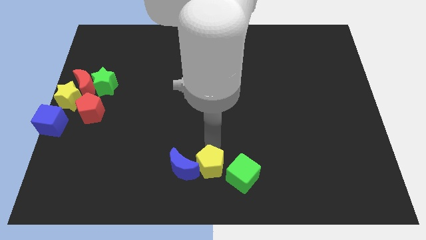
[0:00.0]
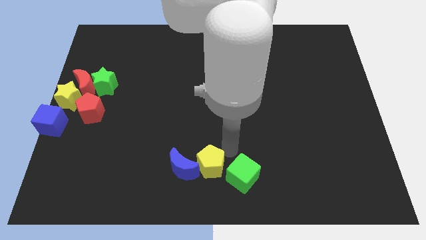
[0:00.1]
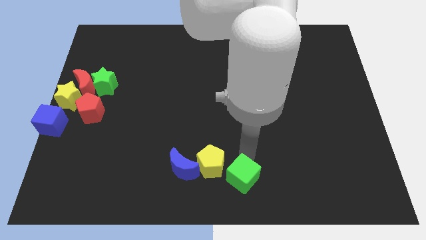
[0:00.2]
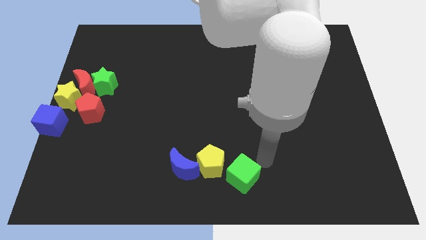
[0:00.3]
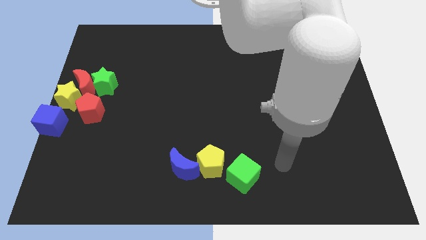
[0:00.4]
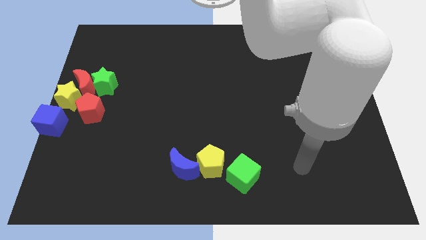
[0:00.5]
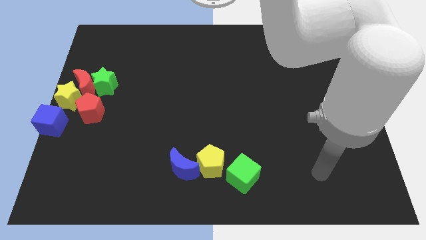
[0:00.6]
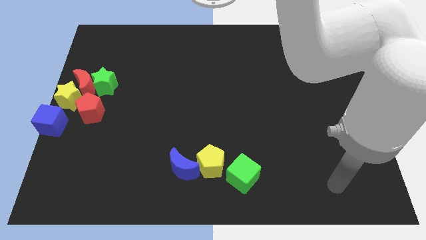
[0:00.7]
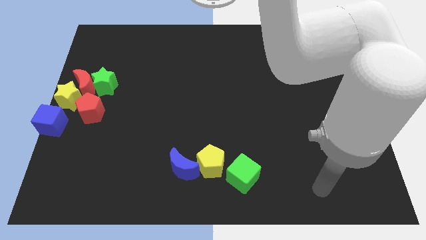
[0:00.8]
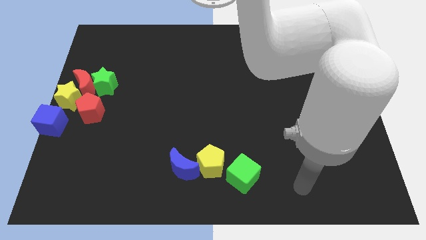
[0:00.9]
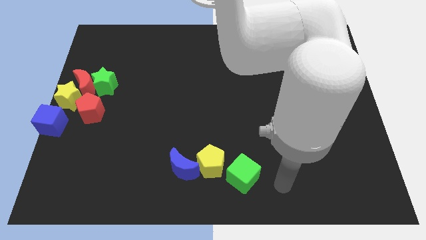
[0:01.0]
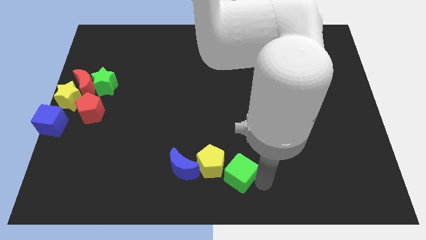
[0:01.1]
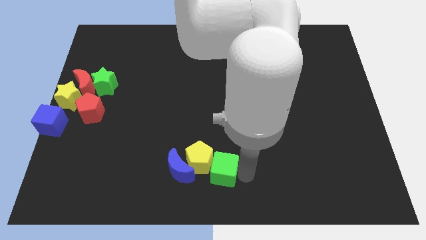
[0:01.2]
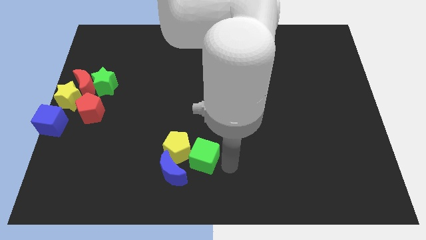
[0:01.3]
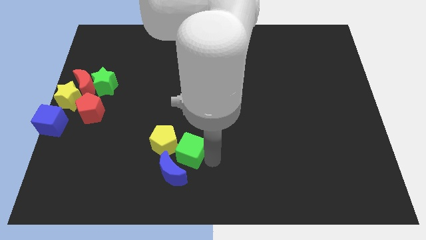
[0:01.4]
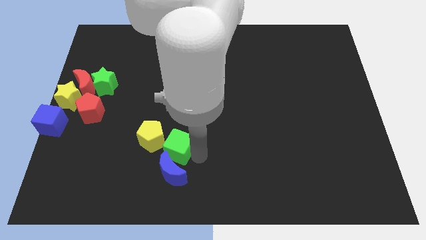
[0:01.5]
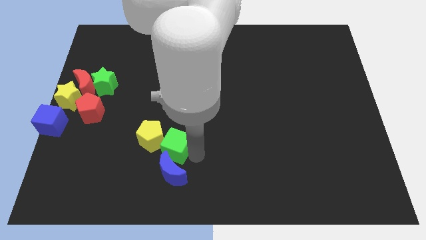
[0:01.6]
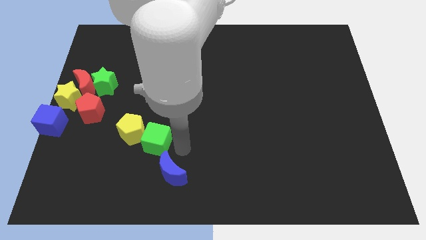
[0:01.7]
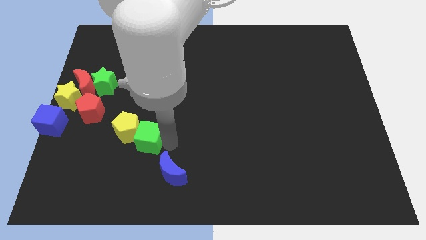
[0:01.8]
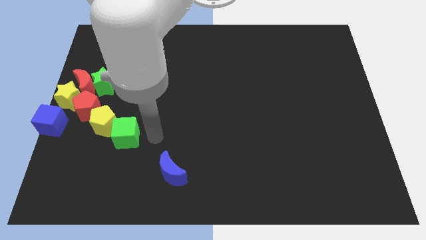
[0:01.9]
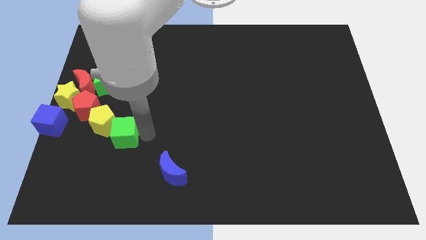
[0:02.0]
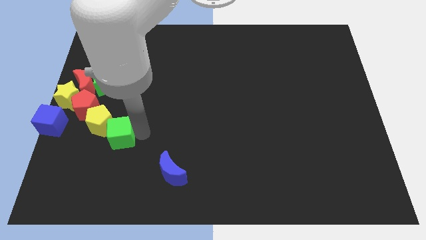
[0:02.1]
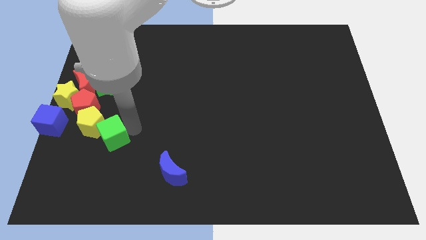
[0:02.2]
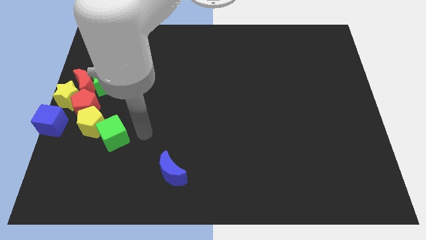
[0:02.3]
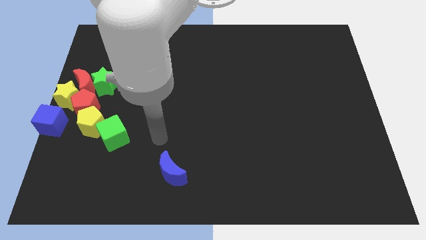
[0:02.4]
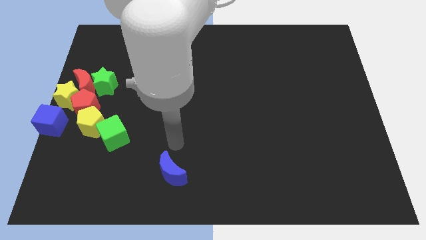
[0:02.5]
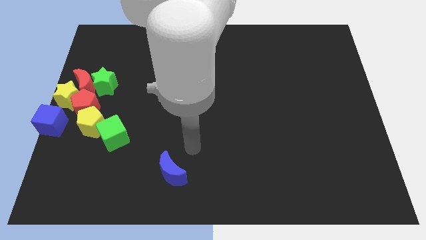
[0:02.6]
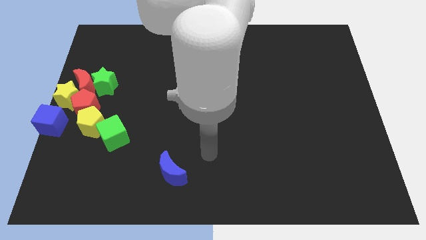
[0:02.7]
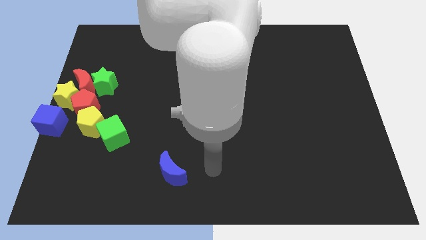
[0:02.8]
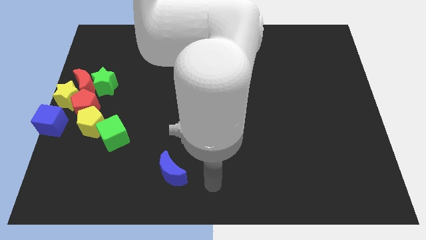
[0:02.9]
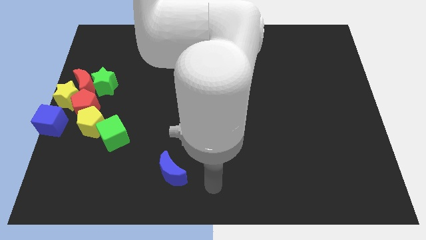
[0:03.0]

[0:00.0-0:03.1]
push the yellow pentagon and green cube together into the red pentagon

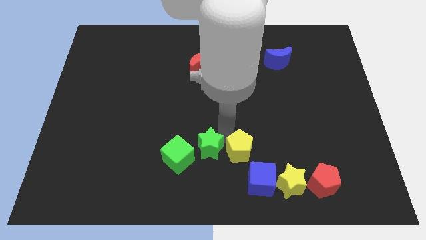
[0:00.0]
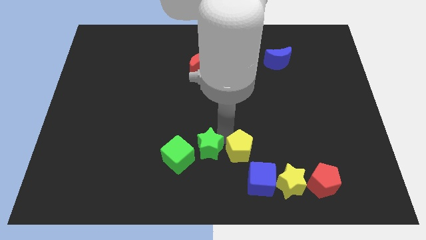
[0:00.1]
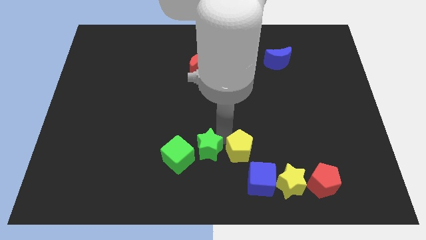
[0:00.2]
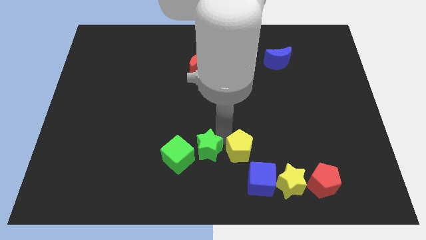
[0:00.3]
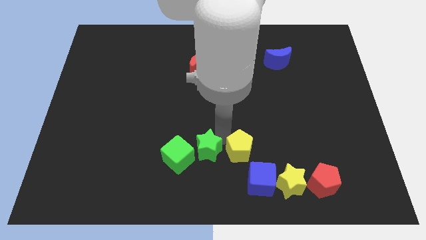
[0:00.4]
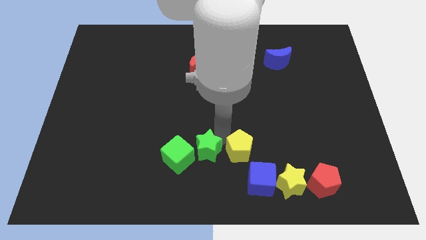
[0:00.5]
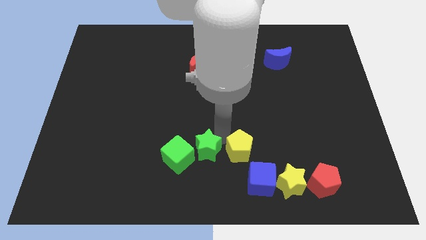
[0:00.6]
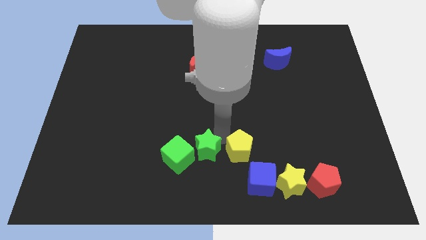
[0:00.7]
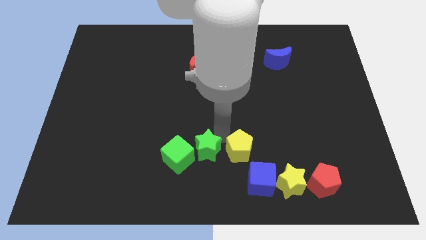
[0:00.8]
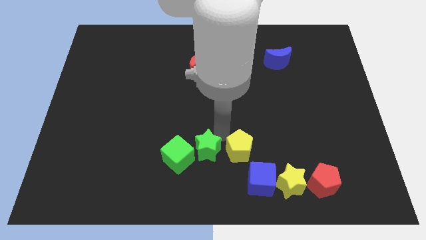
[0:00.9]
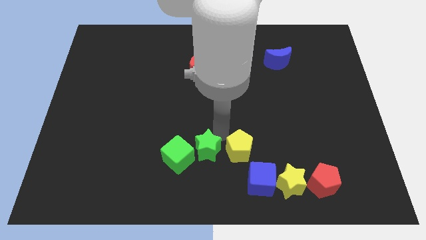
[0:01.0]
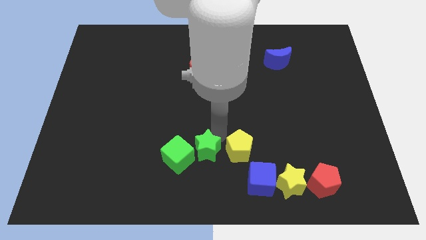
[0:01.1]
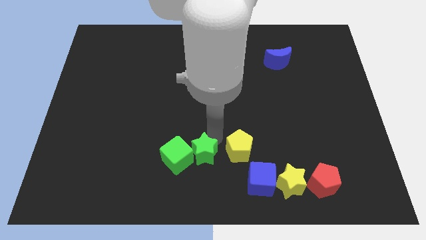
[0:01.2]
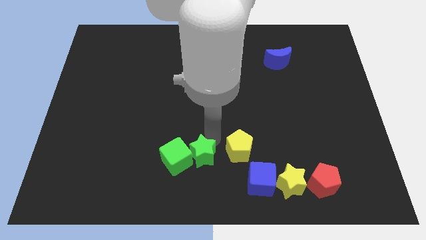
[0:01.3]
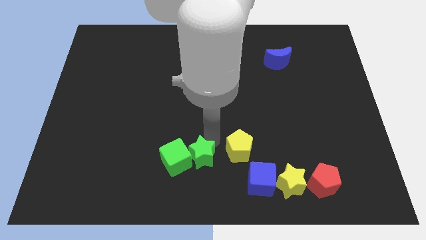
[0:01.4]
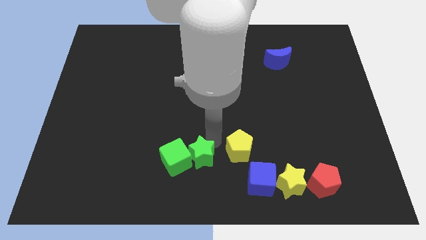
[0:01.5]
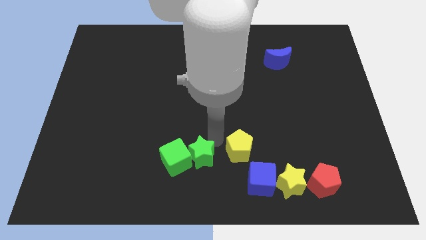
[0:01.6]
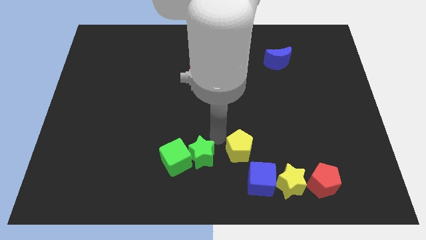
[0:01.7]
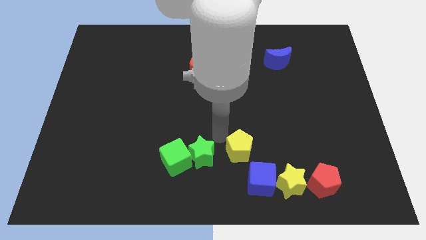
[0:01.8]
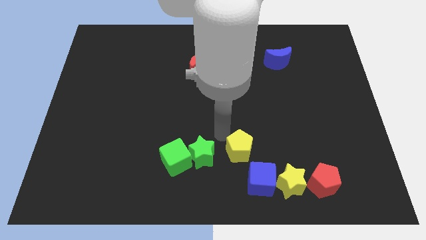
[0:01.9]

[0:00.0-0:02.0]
push the green star into the green cube

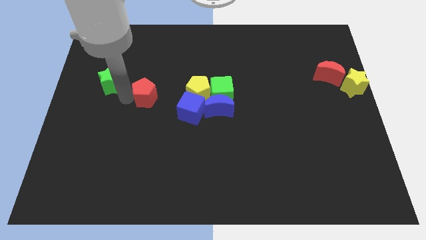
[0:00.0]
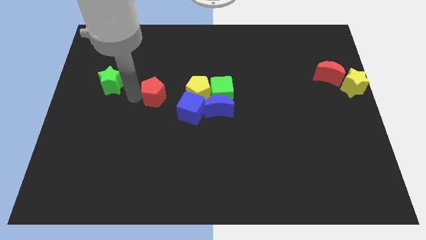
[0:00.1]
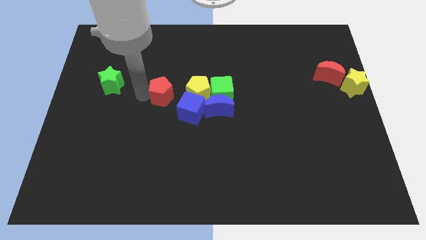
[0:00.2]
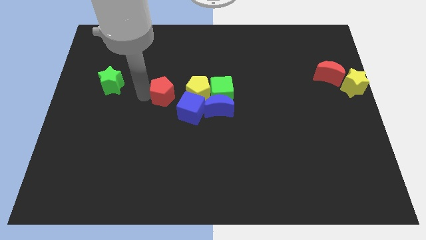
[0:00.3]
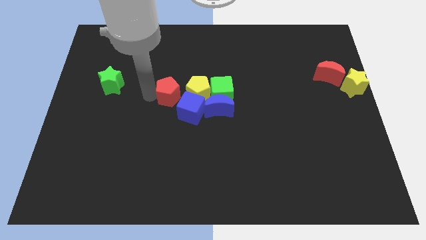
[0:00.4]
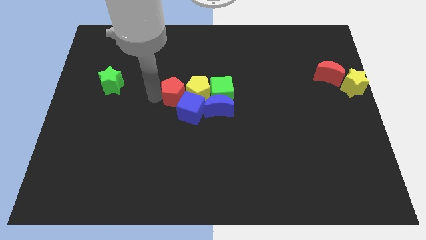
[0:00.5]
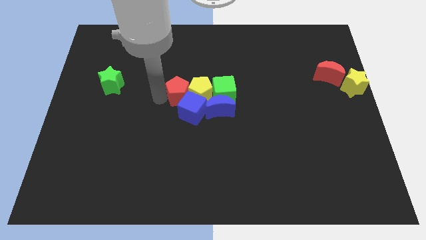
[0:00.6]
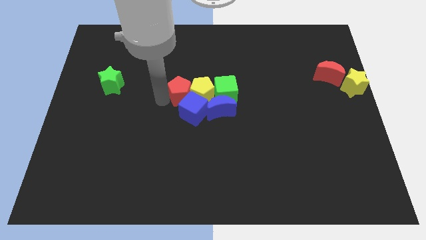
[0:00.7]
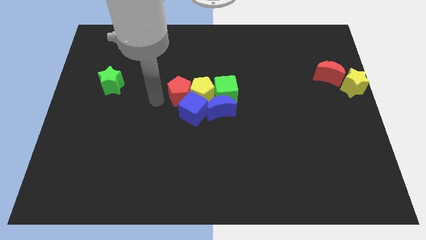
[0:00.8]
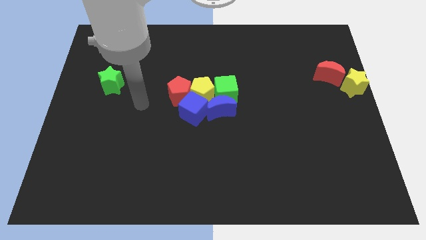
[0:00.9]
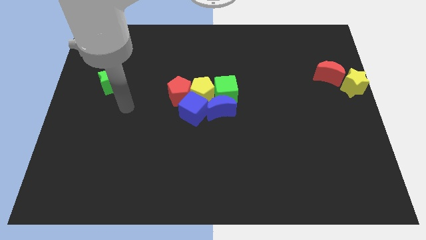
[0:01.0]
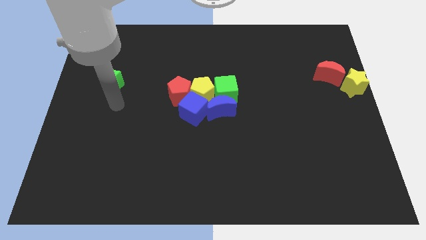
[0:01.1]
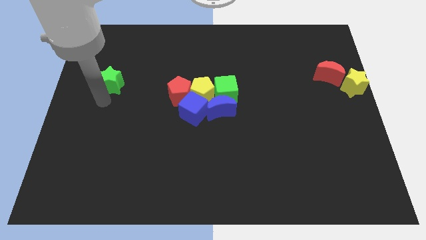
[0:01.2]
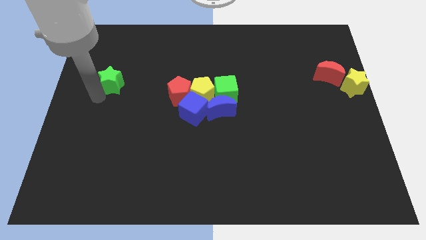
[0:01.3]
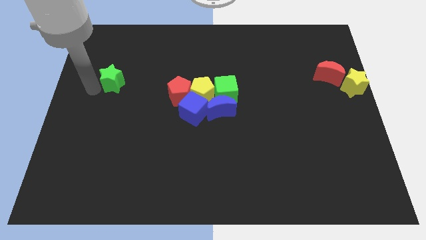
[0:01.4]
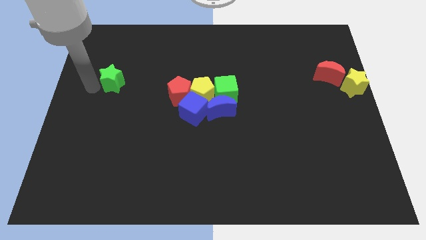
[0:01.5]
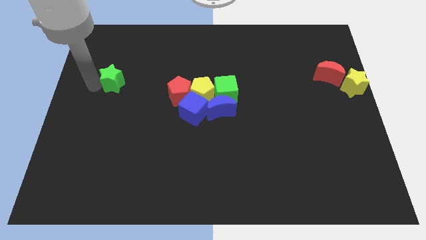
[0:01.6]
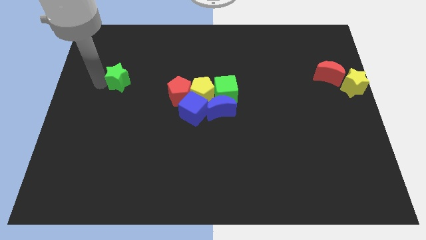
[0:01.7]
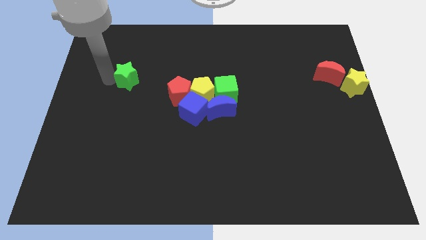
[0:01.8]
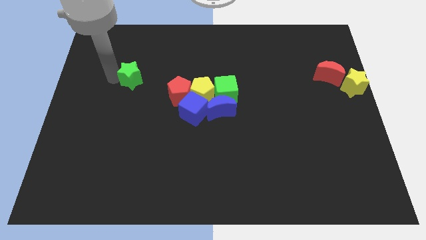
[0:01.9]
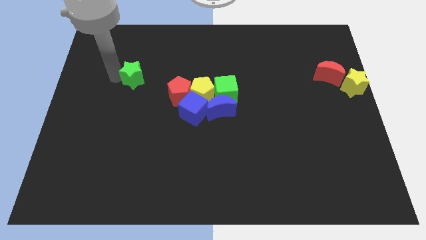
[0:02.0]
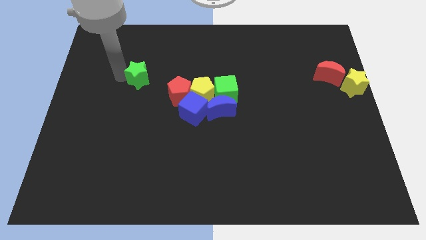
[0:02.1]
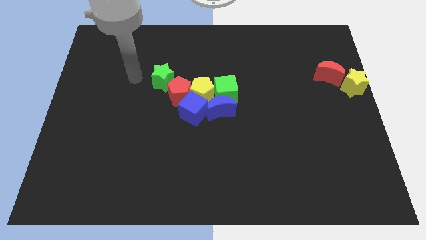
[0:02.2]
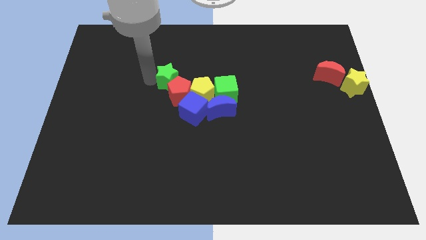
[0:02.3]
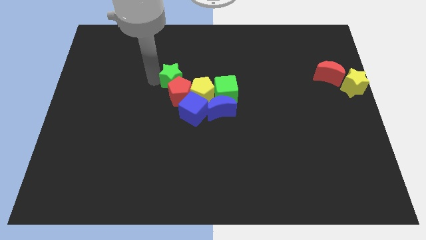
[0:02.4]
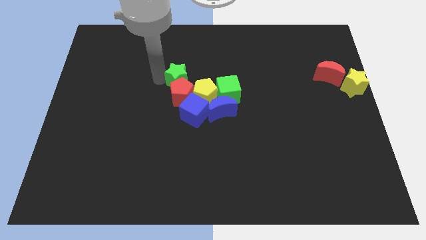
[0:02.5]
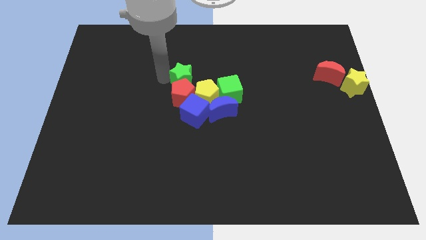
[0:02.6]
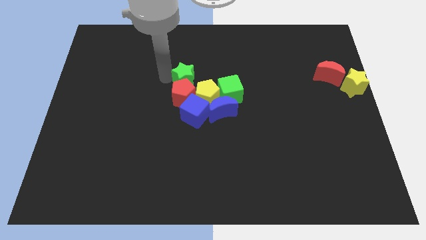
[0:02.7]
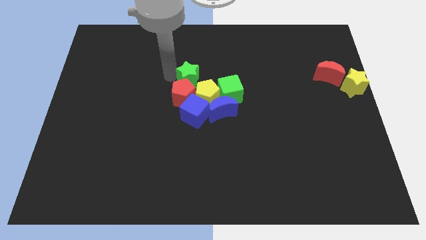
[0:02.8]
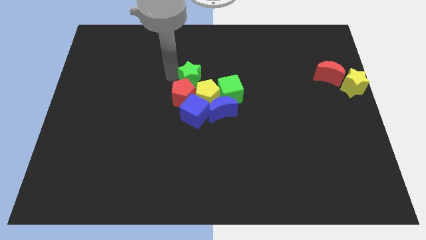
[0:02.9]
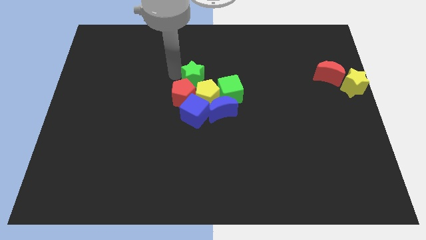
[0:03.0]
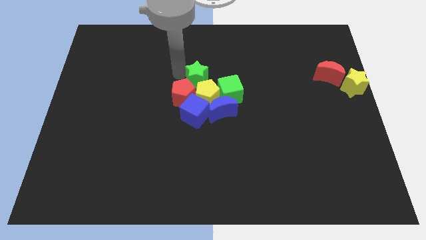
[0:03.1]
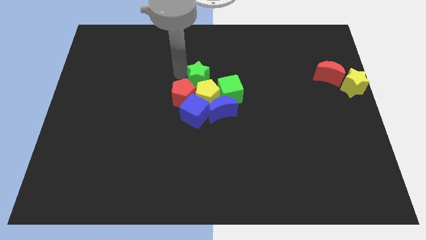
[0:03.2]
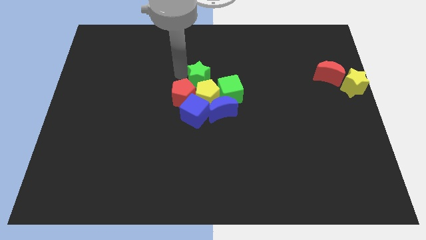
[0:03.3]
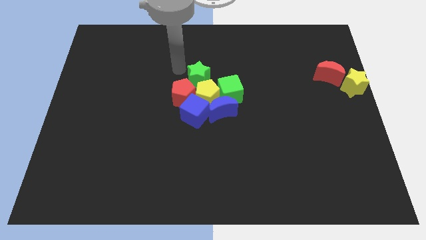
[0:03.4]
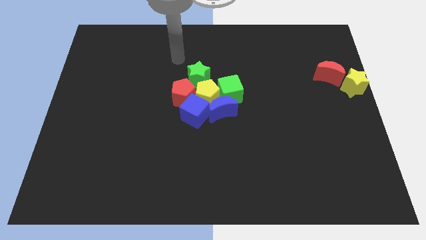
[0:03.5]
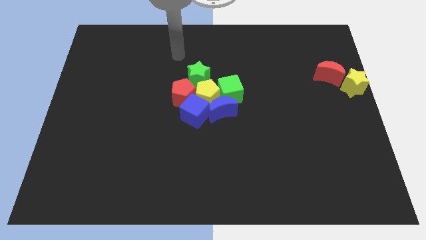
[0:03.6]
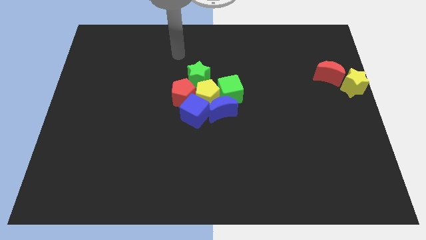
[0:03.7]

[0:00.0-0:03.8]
move the green star towards the group of blocks
